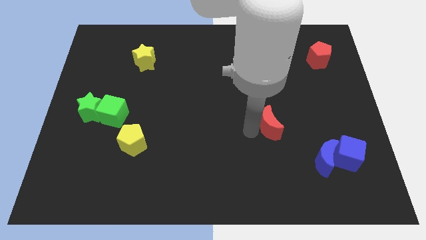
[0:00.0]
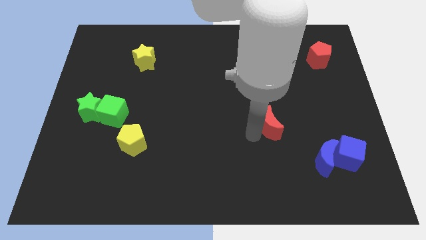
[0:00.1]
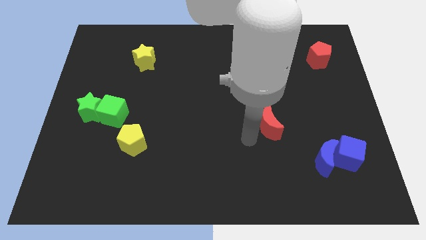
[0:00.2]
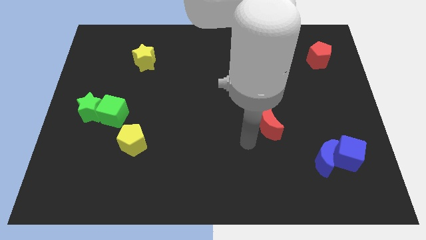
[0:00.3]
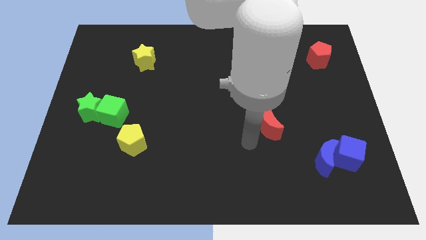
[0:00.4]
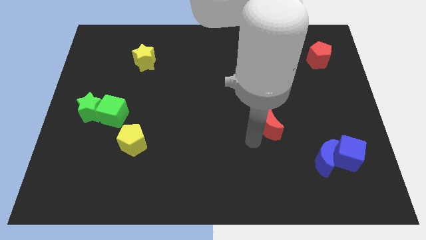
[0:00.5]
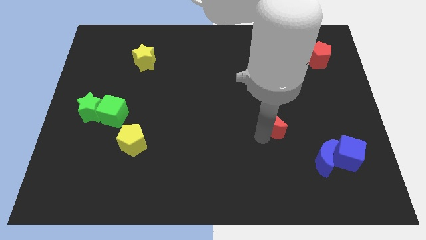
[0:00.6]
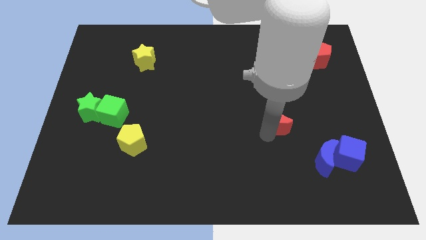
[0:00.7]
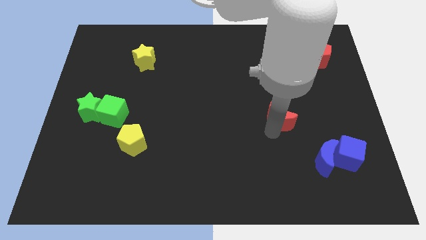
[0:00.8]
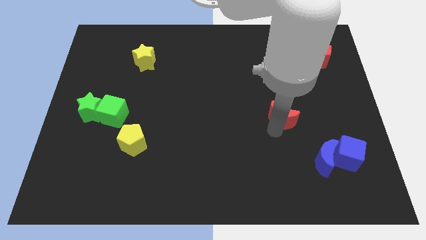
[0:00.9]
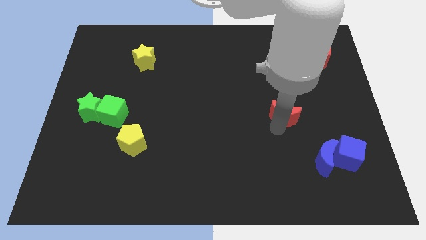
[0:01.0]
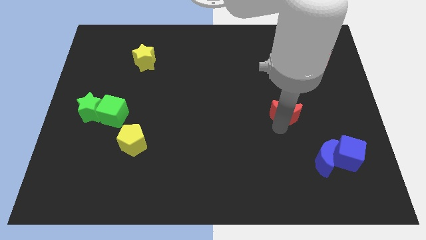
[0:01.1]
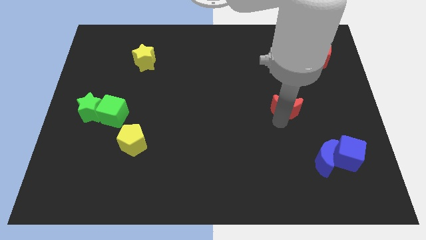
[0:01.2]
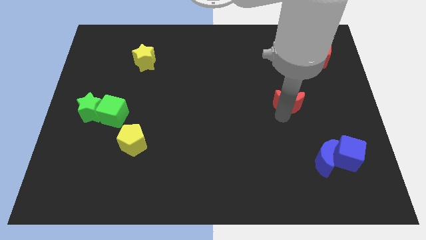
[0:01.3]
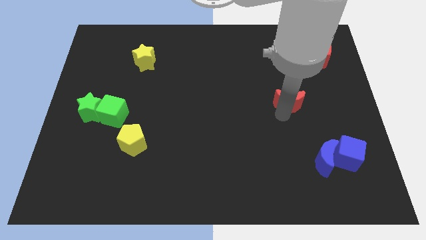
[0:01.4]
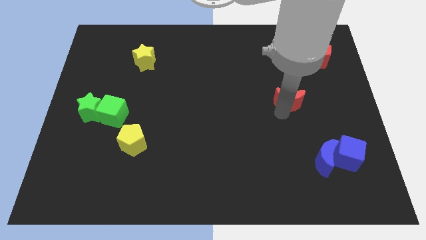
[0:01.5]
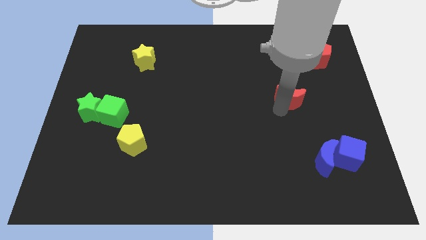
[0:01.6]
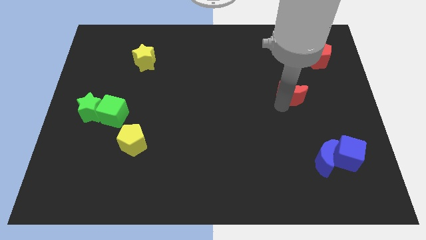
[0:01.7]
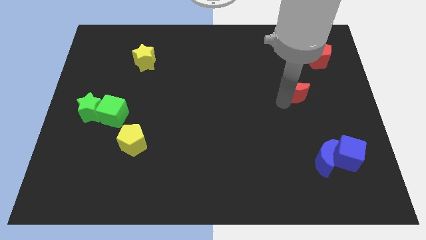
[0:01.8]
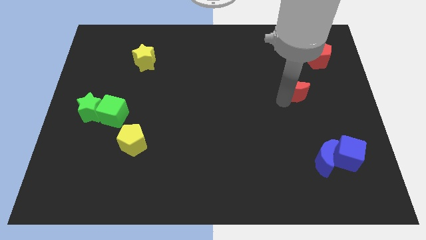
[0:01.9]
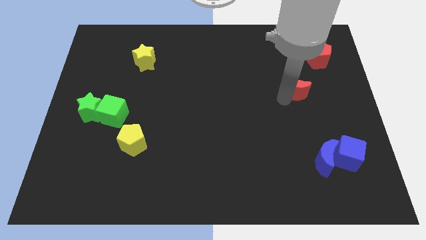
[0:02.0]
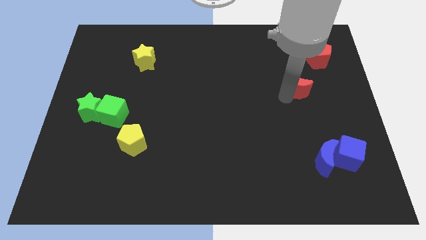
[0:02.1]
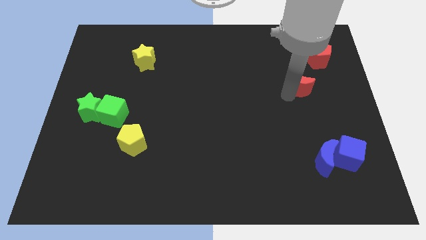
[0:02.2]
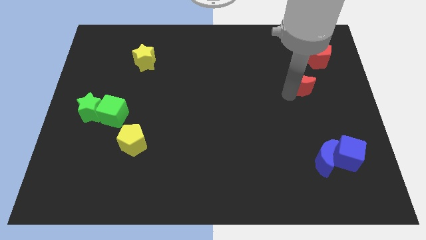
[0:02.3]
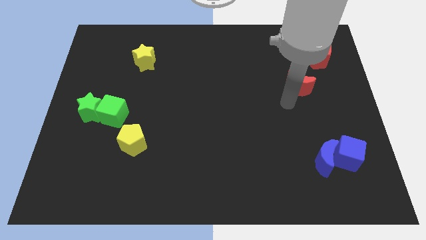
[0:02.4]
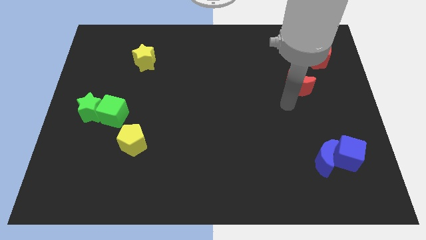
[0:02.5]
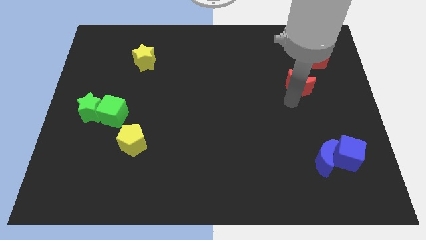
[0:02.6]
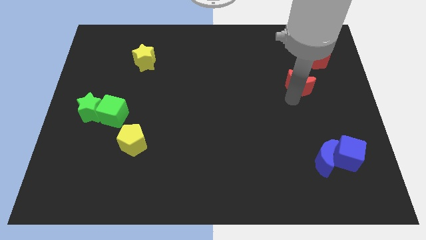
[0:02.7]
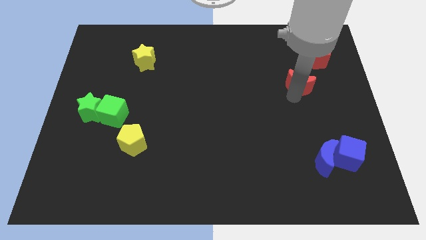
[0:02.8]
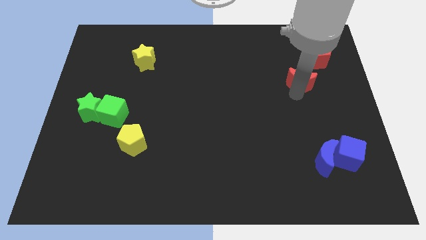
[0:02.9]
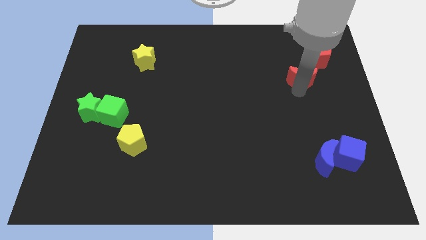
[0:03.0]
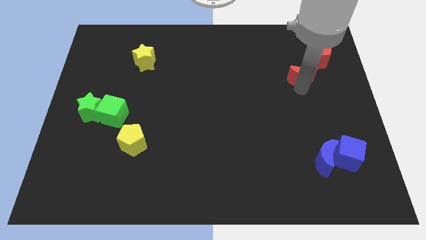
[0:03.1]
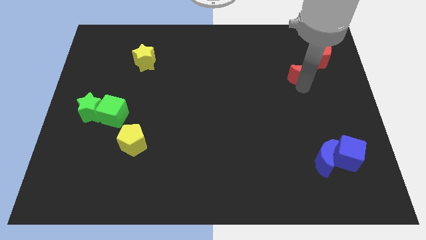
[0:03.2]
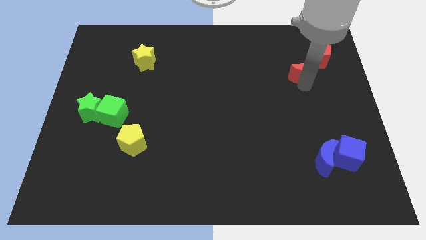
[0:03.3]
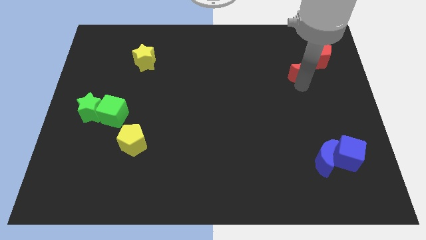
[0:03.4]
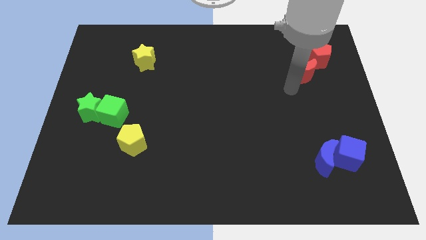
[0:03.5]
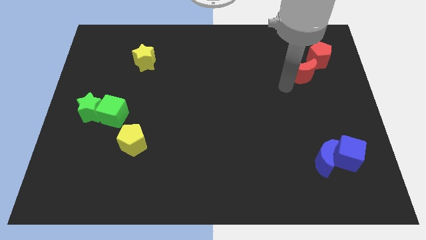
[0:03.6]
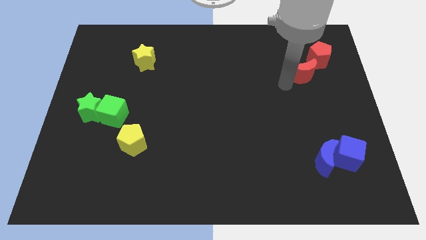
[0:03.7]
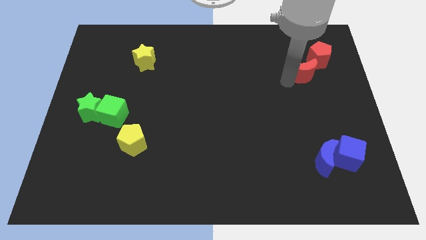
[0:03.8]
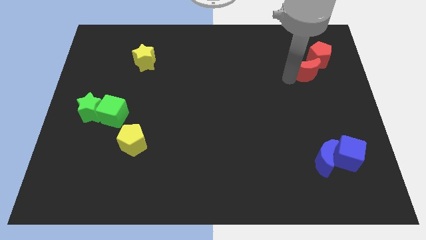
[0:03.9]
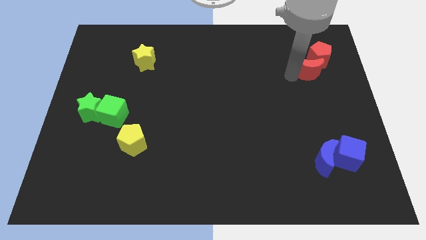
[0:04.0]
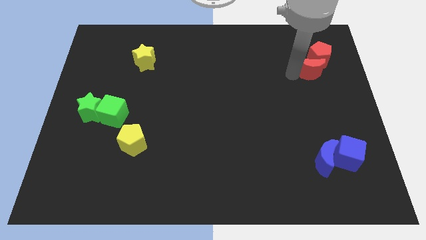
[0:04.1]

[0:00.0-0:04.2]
push the red crescent towards the top right

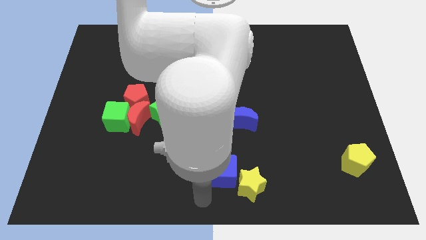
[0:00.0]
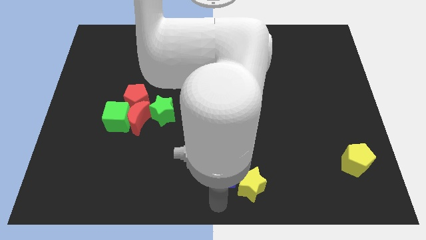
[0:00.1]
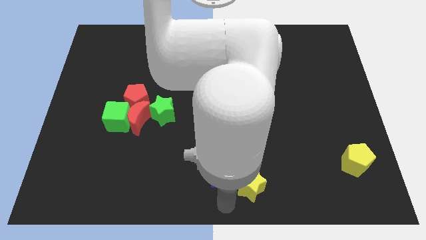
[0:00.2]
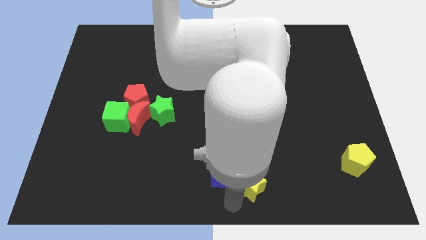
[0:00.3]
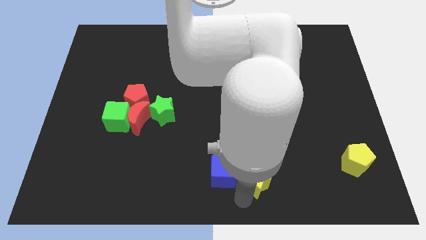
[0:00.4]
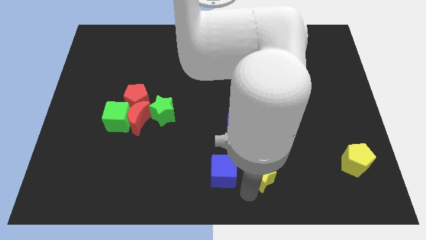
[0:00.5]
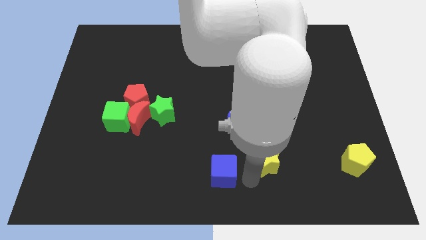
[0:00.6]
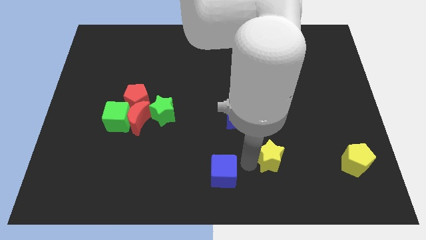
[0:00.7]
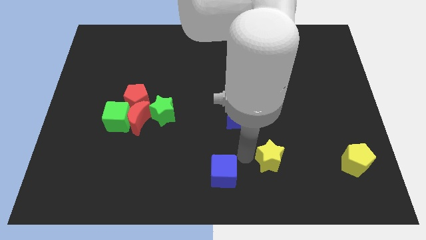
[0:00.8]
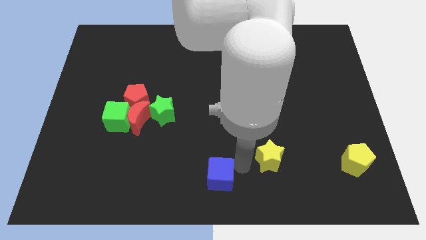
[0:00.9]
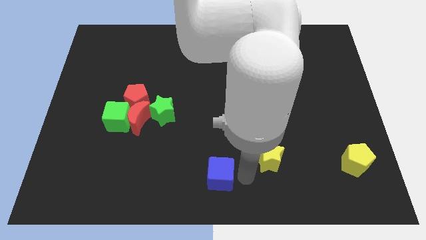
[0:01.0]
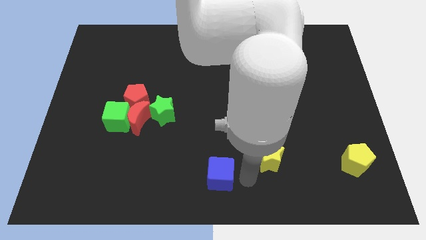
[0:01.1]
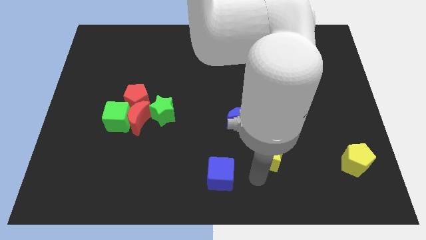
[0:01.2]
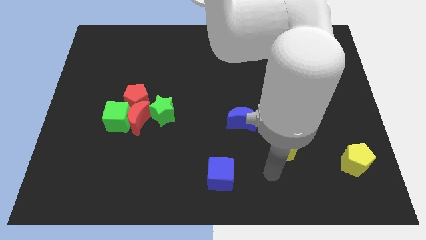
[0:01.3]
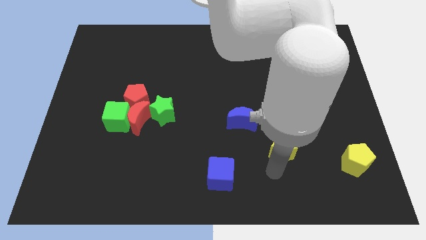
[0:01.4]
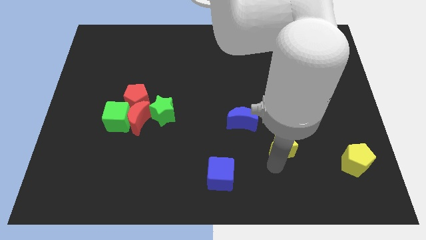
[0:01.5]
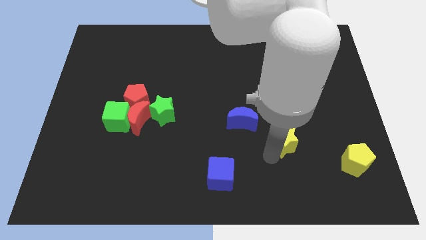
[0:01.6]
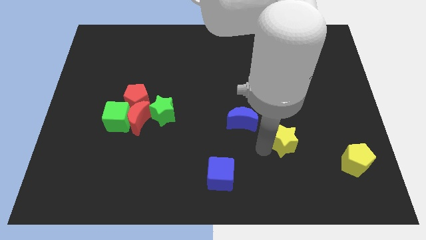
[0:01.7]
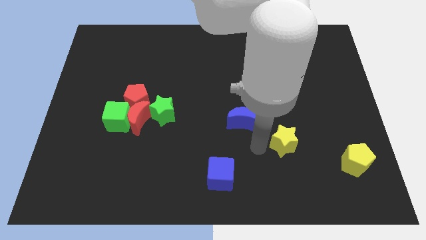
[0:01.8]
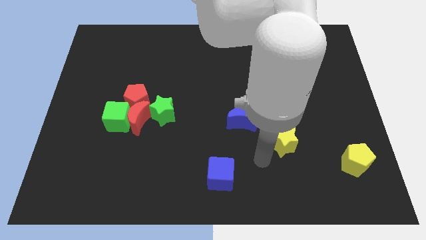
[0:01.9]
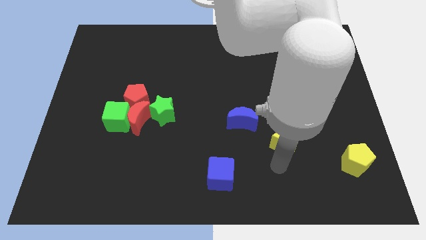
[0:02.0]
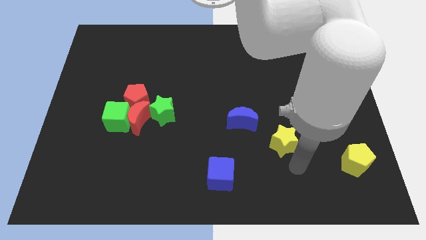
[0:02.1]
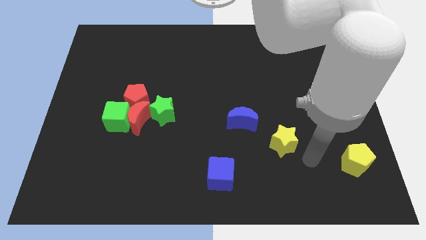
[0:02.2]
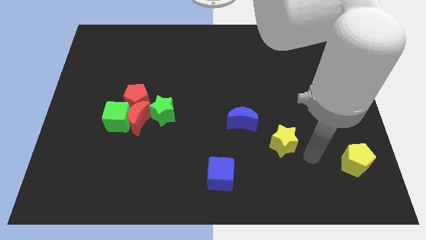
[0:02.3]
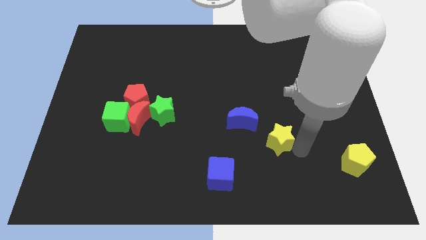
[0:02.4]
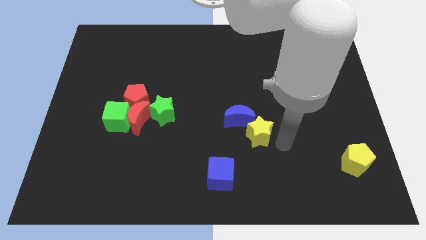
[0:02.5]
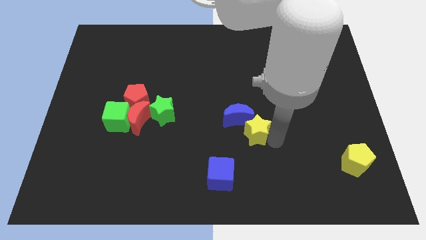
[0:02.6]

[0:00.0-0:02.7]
move the yellow star to the bottom right to the blue crescent

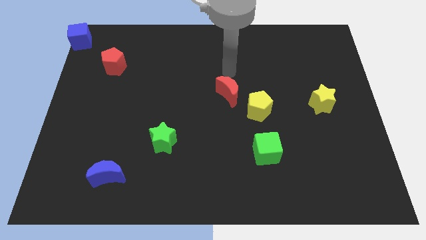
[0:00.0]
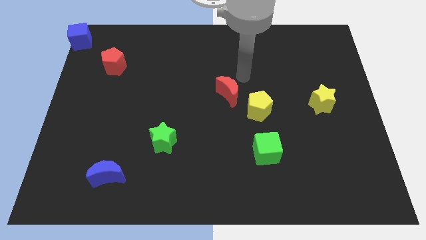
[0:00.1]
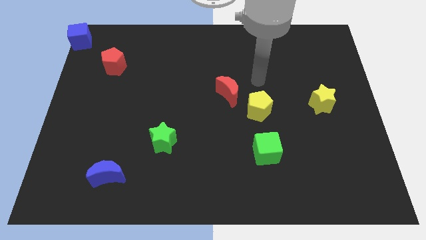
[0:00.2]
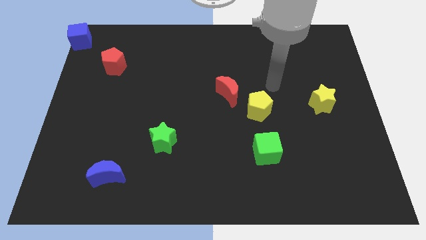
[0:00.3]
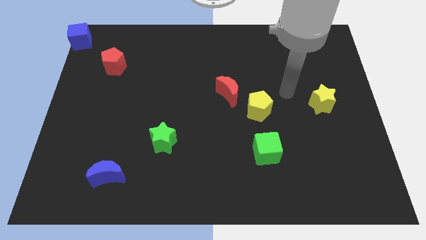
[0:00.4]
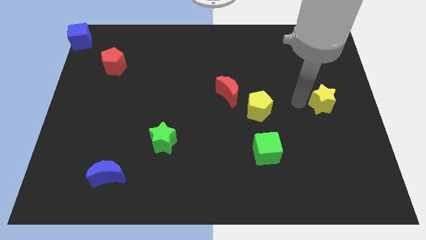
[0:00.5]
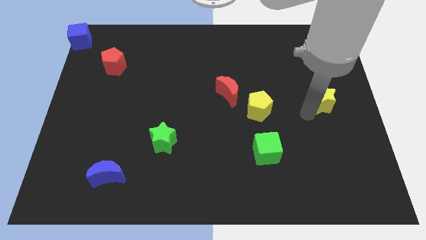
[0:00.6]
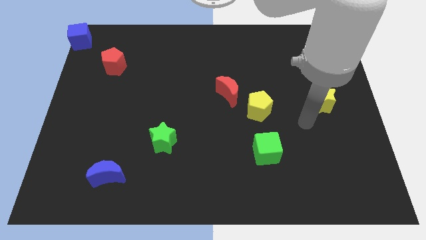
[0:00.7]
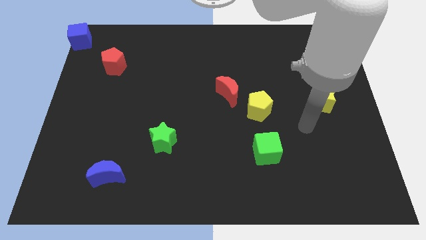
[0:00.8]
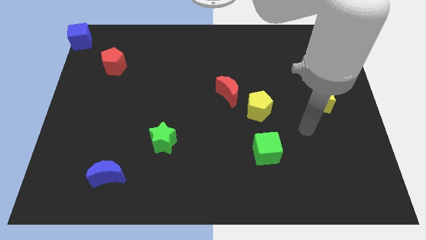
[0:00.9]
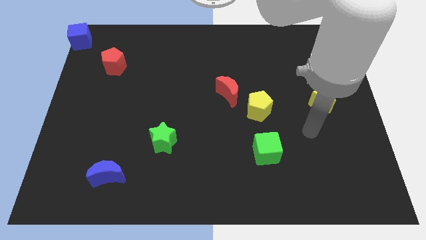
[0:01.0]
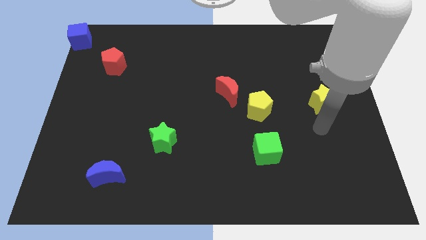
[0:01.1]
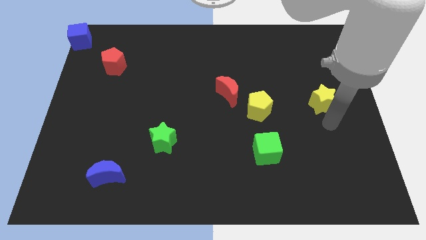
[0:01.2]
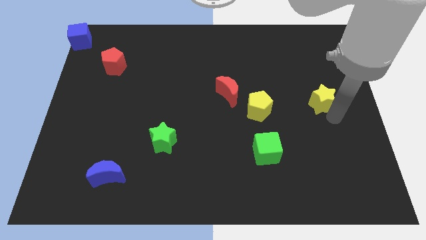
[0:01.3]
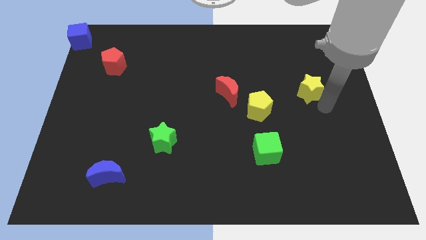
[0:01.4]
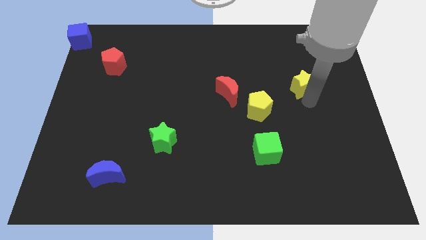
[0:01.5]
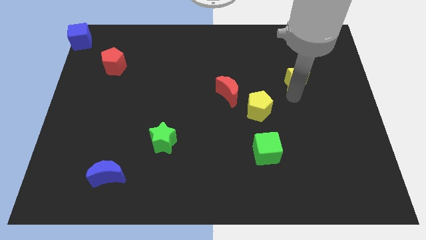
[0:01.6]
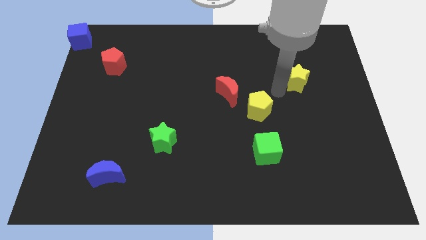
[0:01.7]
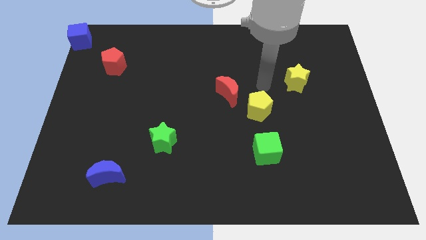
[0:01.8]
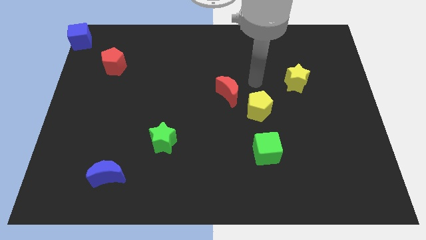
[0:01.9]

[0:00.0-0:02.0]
place your arm in between the red moon and yellow star

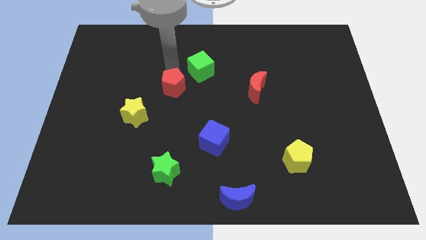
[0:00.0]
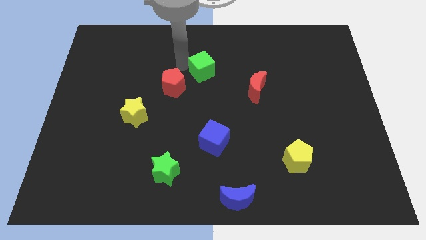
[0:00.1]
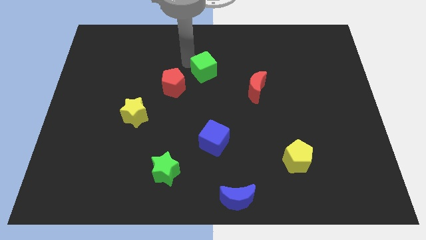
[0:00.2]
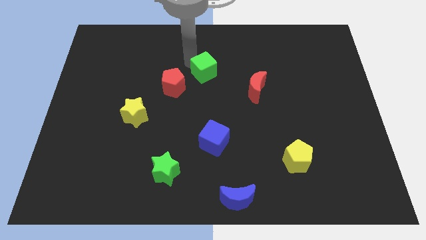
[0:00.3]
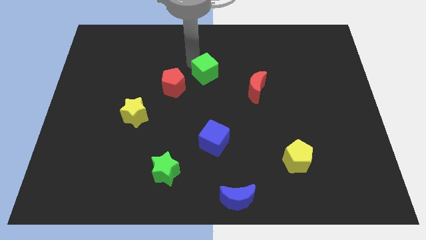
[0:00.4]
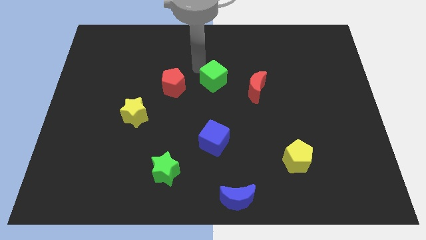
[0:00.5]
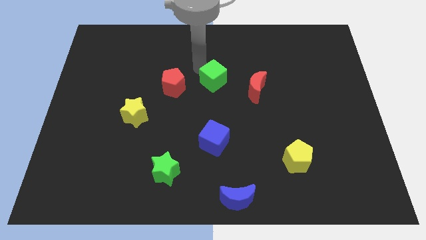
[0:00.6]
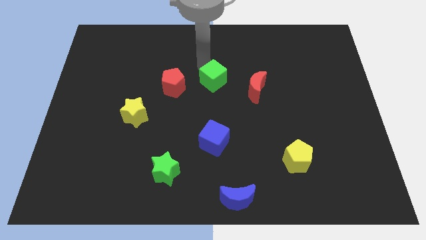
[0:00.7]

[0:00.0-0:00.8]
push green cube slightly downwards
